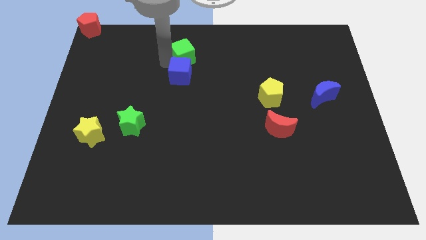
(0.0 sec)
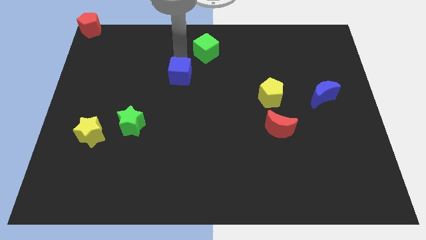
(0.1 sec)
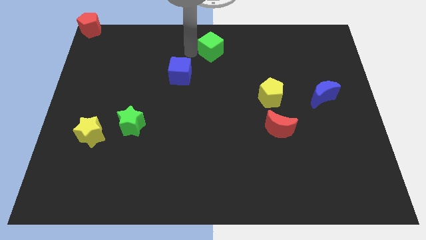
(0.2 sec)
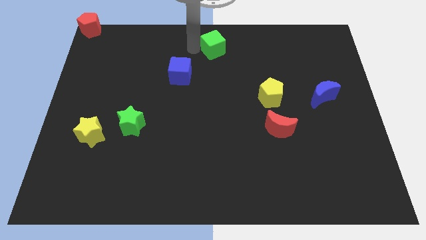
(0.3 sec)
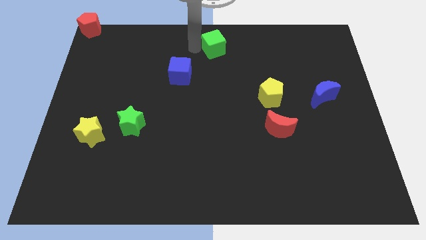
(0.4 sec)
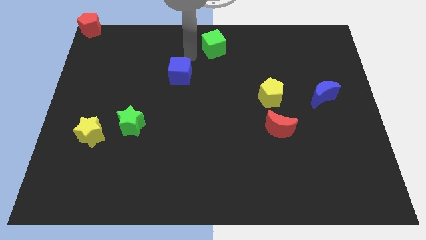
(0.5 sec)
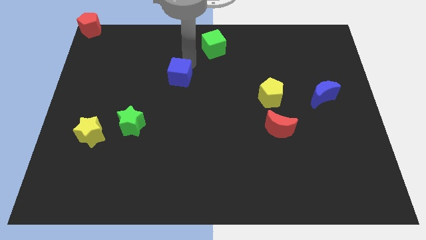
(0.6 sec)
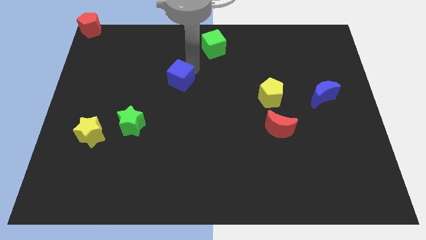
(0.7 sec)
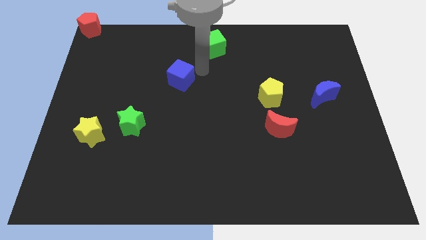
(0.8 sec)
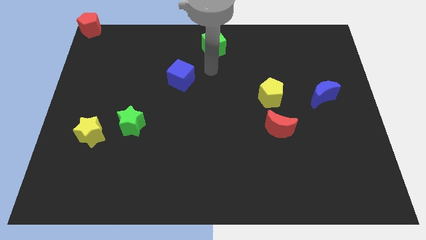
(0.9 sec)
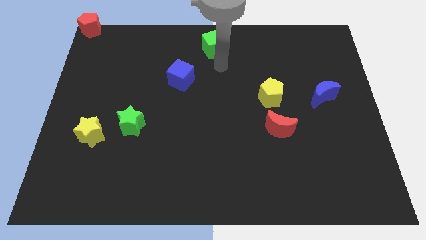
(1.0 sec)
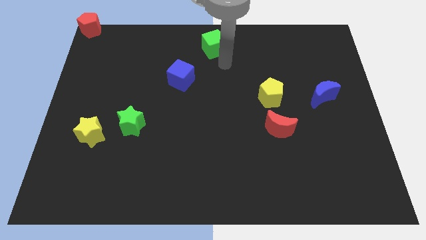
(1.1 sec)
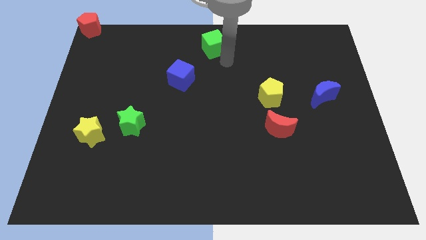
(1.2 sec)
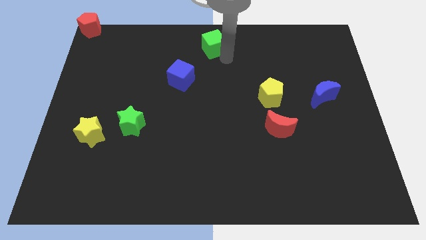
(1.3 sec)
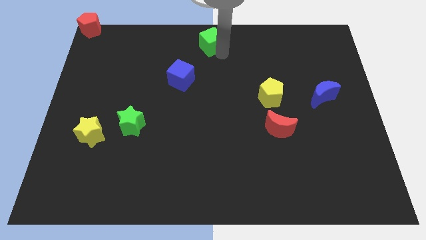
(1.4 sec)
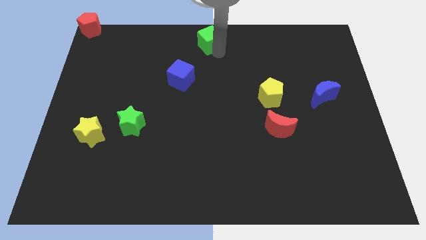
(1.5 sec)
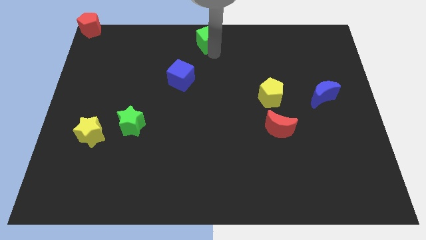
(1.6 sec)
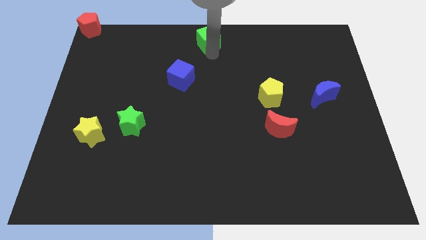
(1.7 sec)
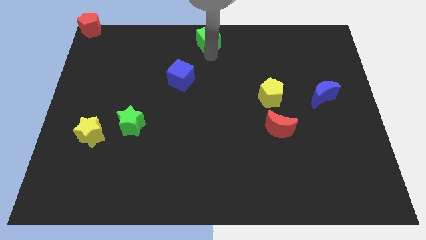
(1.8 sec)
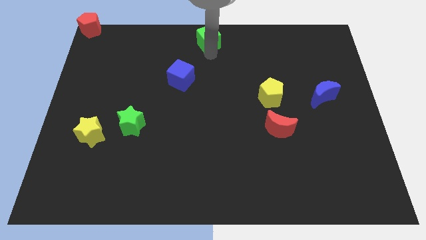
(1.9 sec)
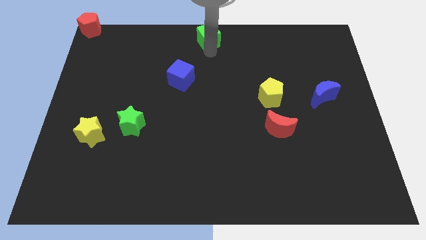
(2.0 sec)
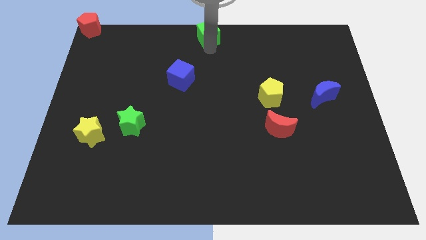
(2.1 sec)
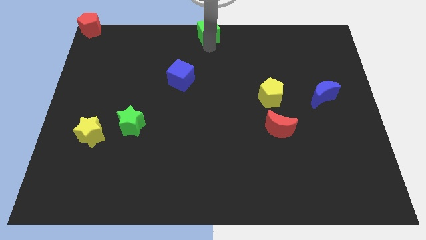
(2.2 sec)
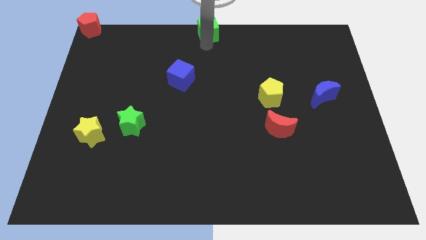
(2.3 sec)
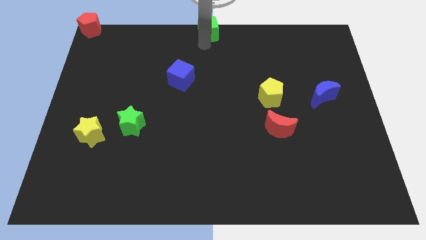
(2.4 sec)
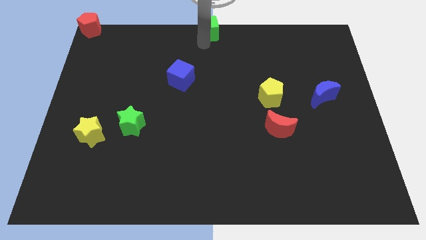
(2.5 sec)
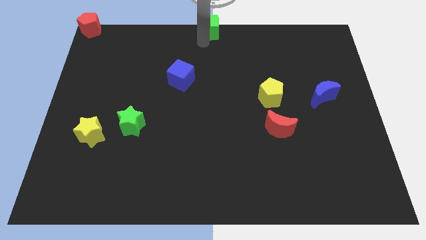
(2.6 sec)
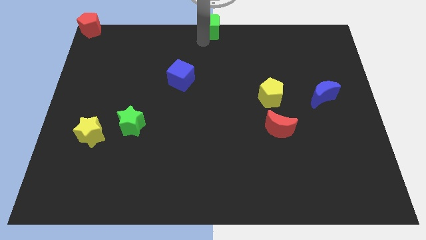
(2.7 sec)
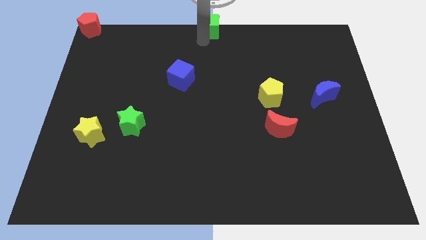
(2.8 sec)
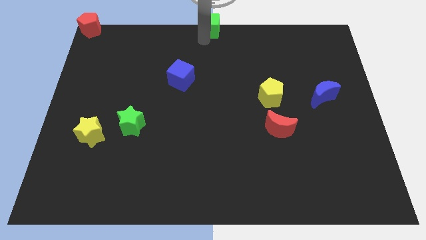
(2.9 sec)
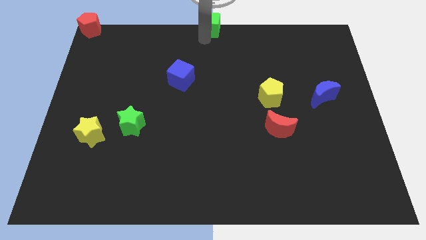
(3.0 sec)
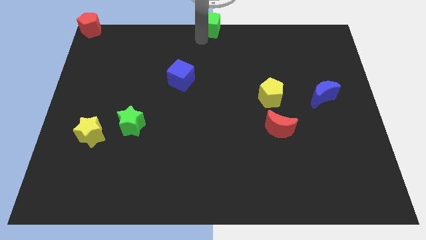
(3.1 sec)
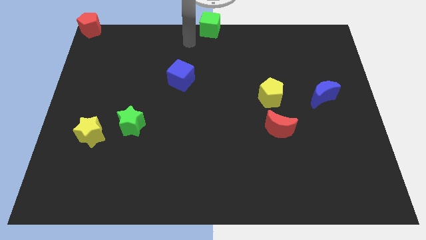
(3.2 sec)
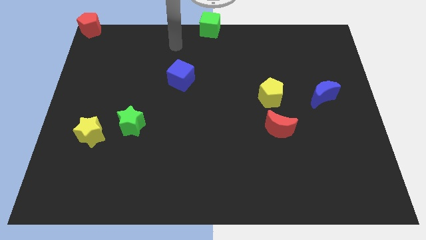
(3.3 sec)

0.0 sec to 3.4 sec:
move the green cube to the top center of the board

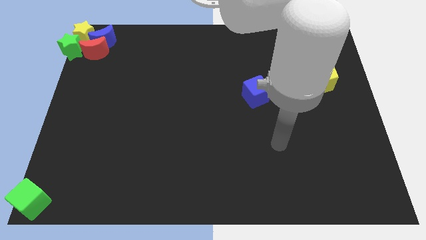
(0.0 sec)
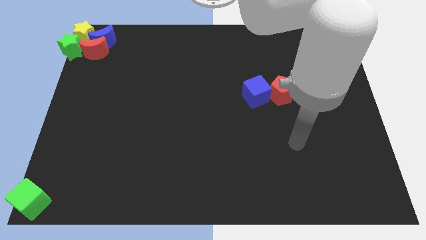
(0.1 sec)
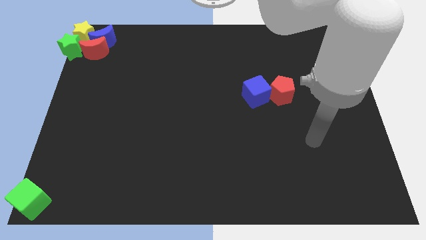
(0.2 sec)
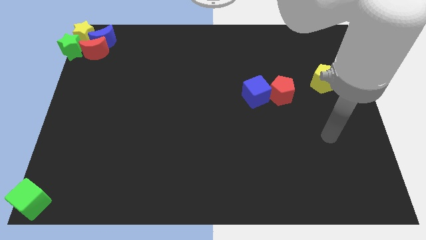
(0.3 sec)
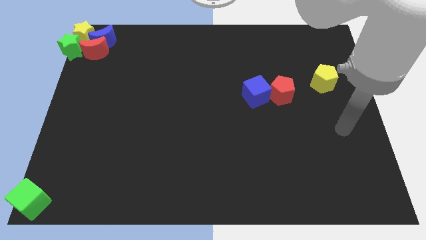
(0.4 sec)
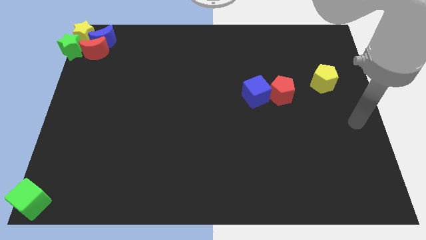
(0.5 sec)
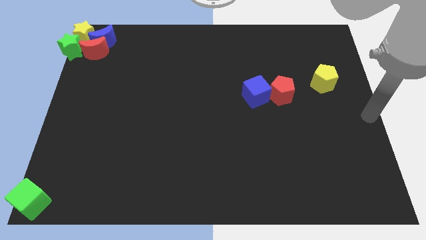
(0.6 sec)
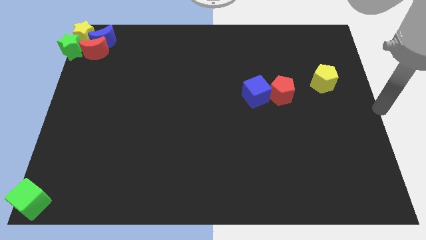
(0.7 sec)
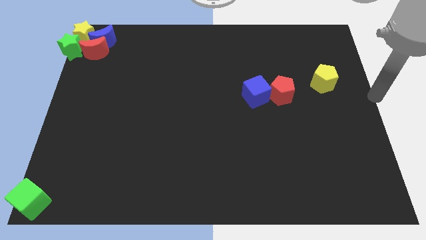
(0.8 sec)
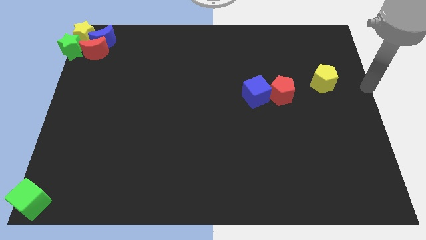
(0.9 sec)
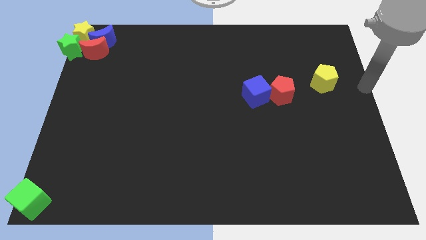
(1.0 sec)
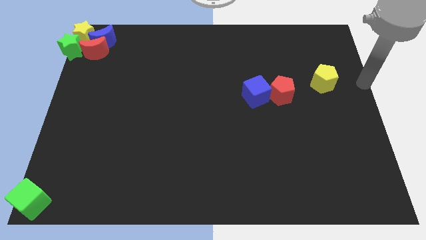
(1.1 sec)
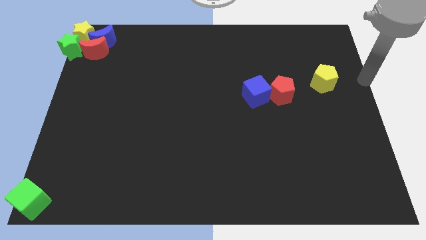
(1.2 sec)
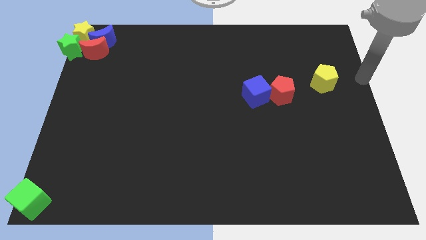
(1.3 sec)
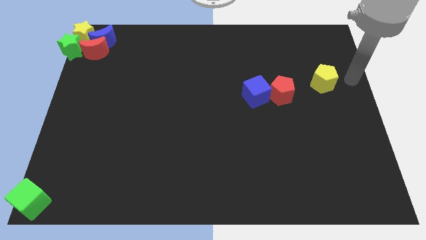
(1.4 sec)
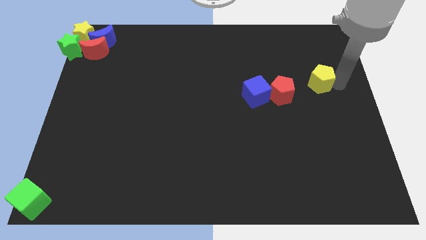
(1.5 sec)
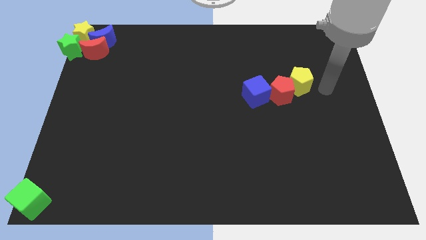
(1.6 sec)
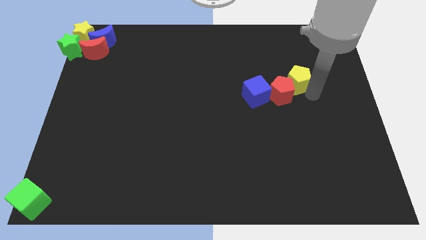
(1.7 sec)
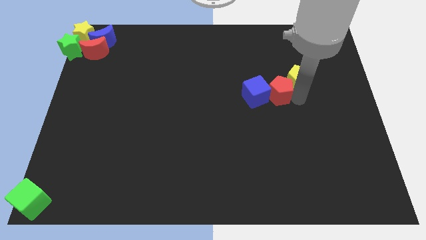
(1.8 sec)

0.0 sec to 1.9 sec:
slide the yellow pentagon into the red pentagon

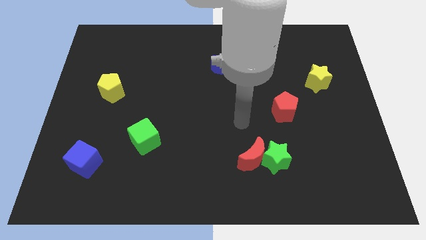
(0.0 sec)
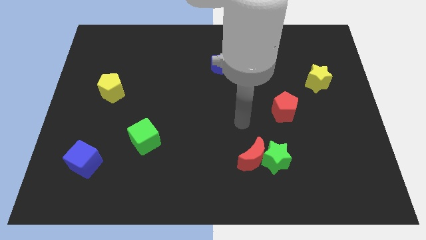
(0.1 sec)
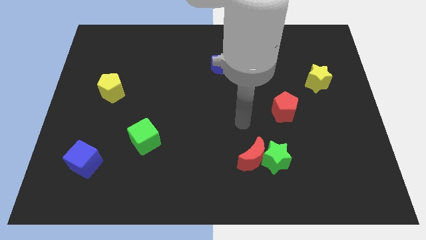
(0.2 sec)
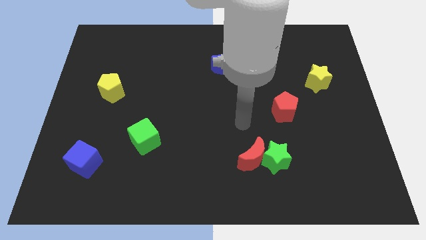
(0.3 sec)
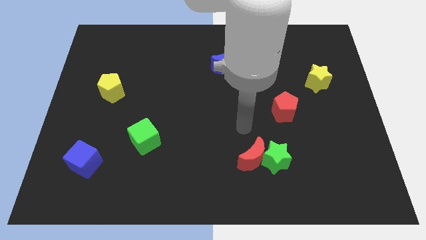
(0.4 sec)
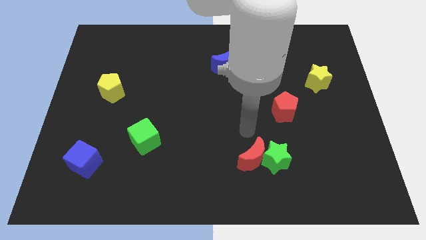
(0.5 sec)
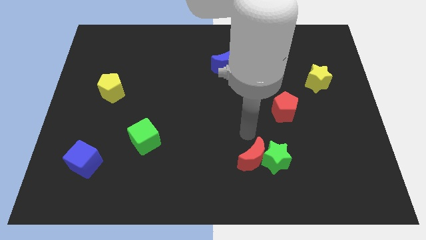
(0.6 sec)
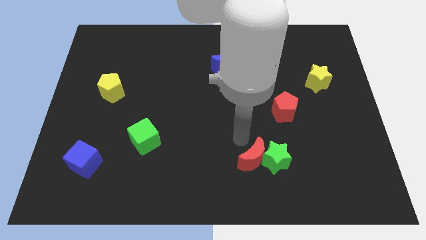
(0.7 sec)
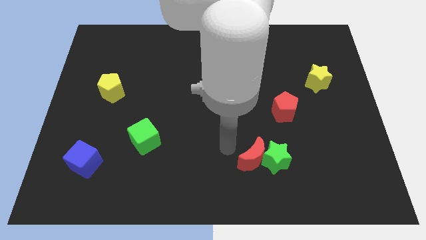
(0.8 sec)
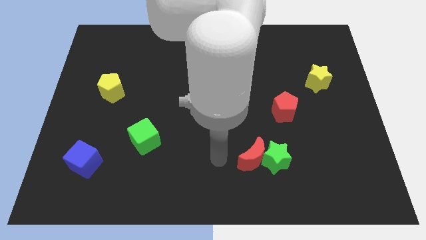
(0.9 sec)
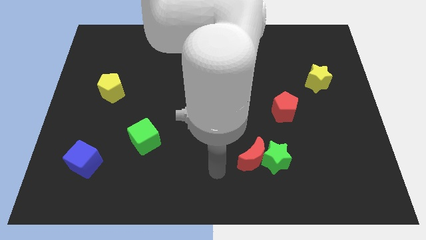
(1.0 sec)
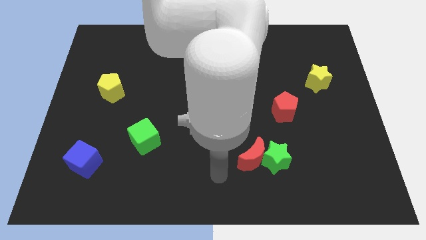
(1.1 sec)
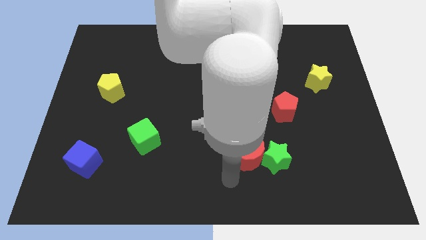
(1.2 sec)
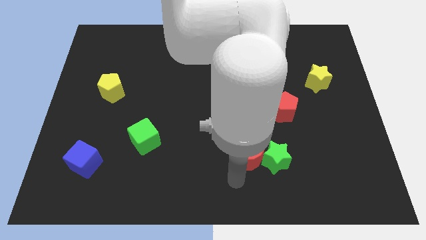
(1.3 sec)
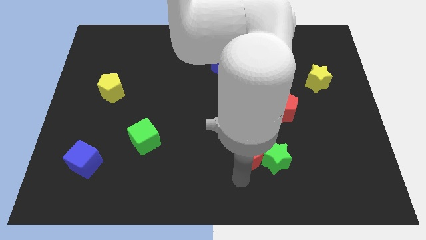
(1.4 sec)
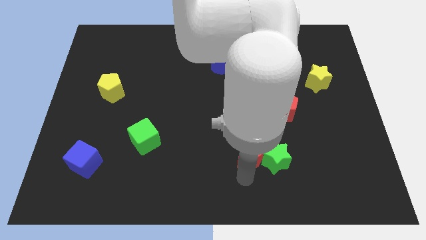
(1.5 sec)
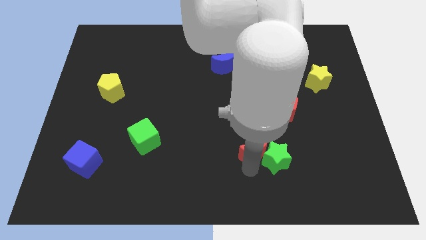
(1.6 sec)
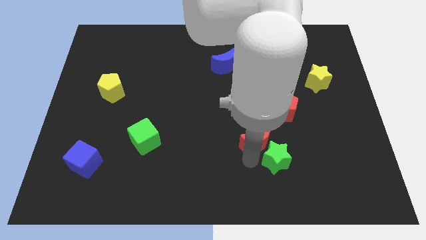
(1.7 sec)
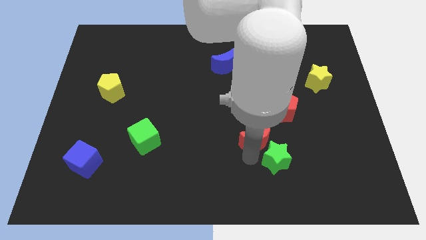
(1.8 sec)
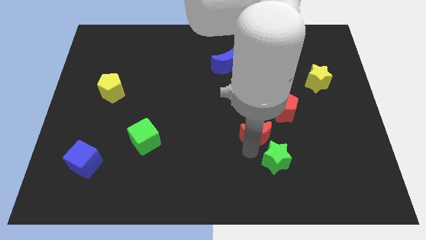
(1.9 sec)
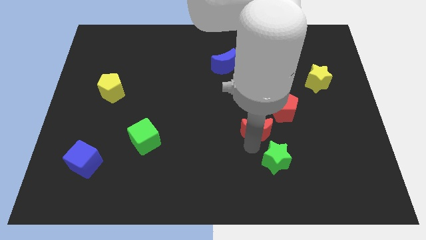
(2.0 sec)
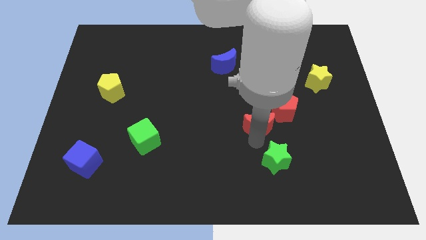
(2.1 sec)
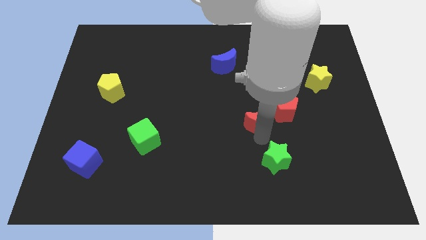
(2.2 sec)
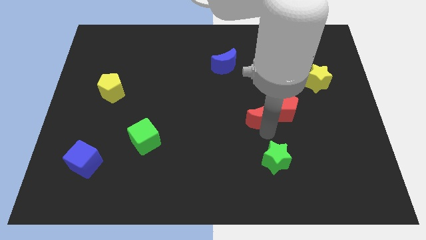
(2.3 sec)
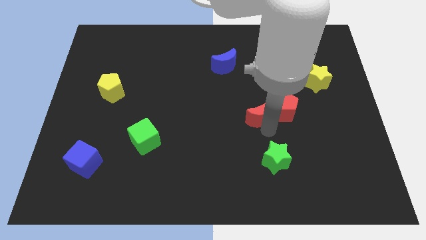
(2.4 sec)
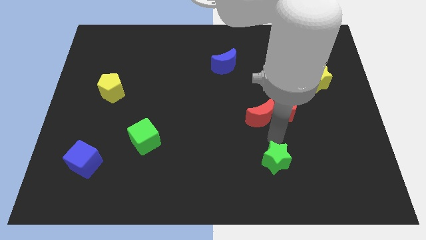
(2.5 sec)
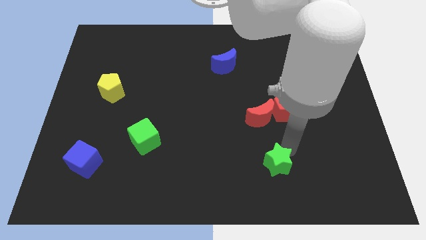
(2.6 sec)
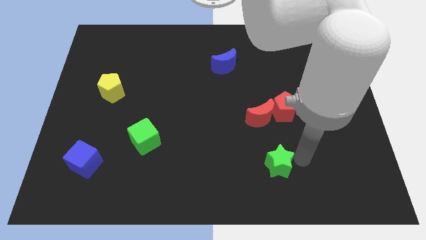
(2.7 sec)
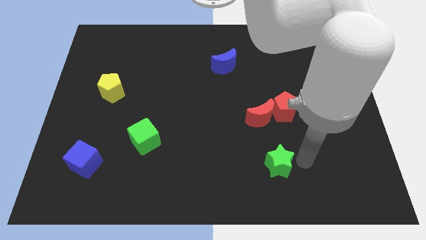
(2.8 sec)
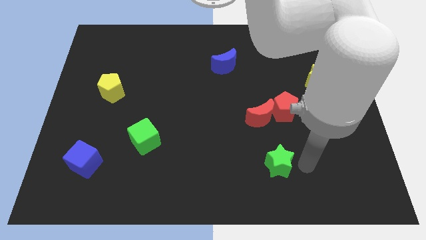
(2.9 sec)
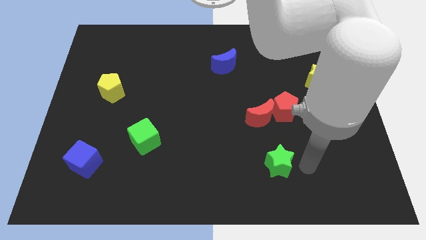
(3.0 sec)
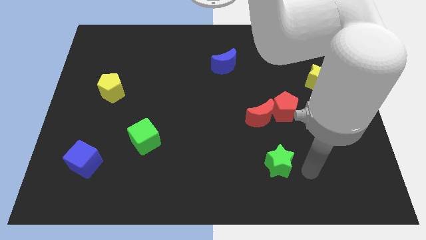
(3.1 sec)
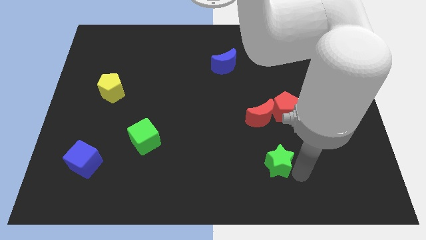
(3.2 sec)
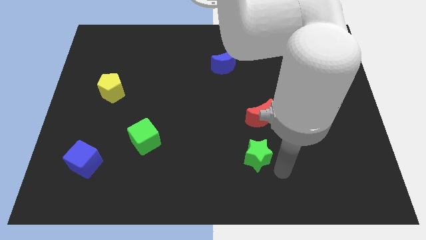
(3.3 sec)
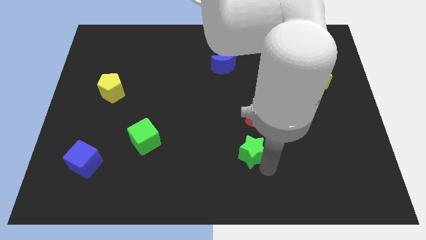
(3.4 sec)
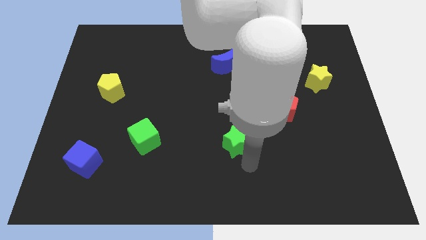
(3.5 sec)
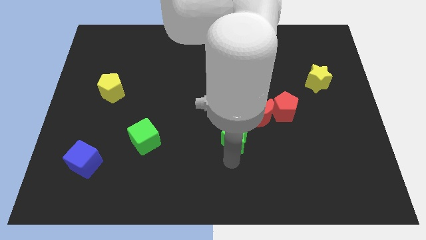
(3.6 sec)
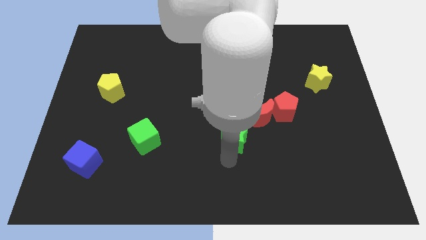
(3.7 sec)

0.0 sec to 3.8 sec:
move red crescent to the left of the red pentagon
